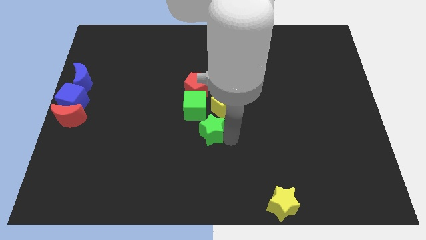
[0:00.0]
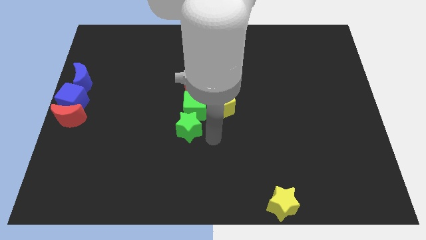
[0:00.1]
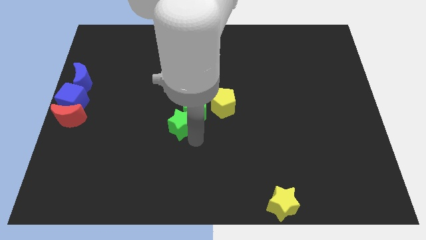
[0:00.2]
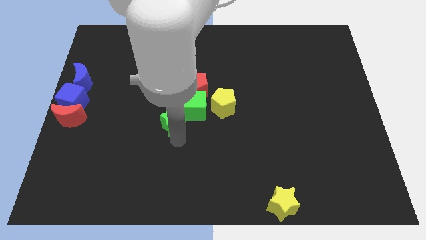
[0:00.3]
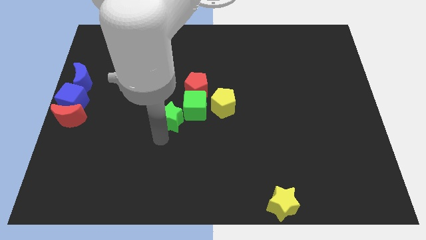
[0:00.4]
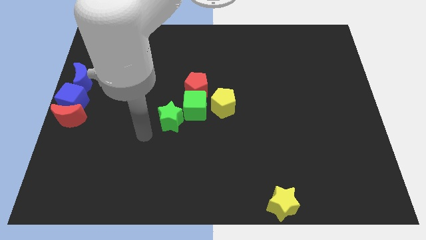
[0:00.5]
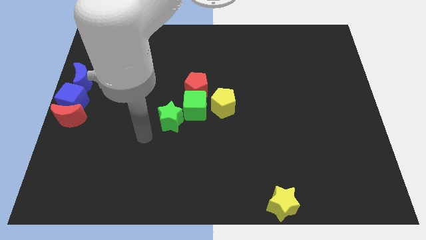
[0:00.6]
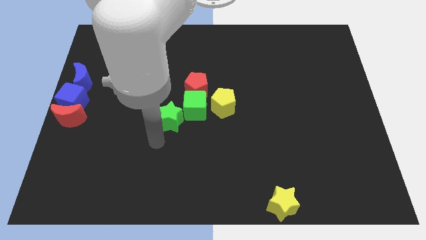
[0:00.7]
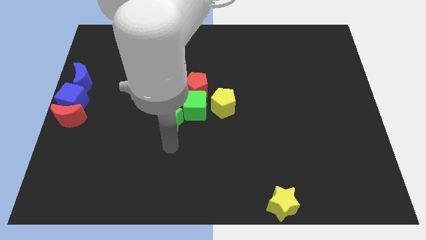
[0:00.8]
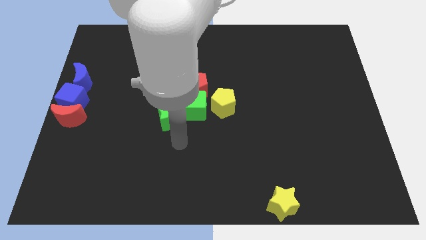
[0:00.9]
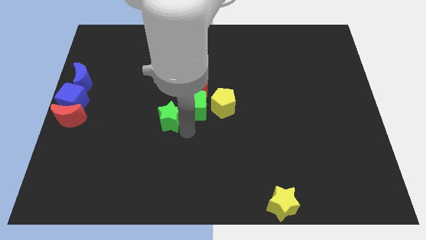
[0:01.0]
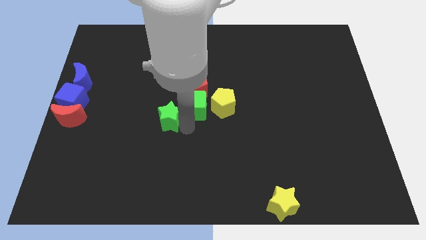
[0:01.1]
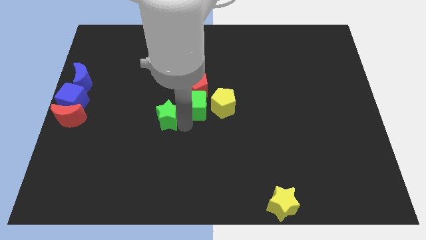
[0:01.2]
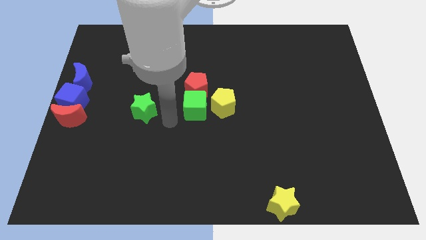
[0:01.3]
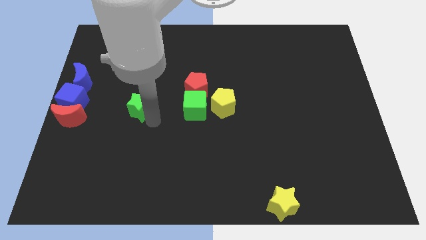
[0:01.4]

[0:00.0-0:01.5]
place the green star to the left of the green cube

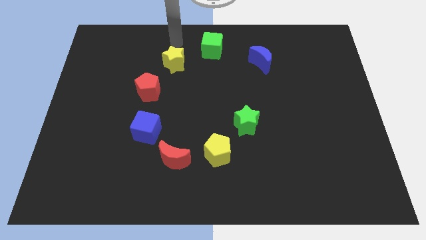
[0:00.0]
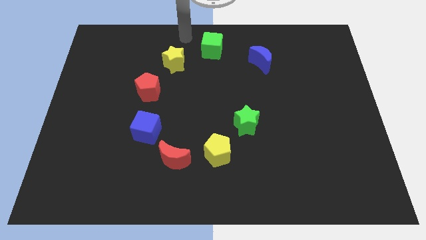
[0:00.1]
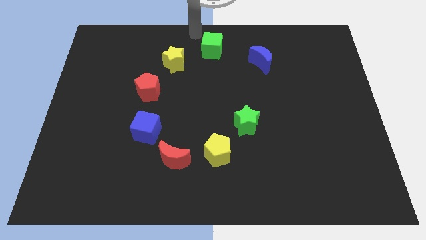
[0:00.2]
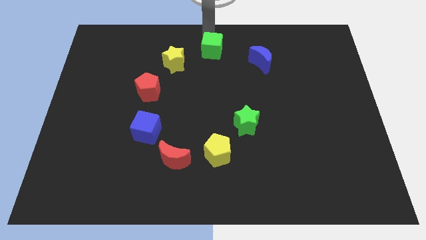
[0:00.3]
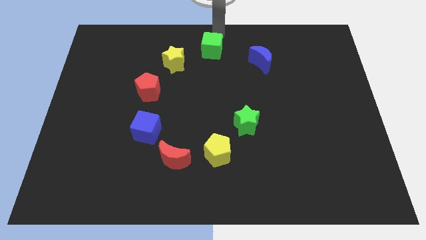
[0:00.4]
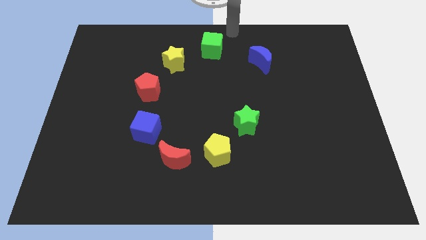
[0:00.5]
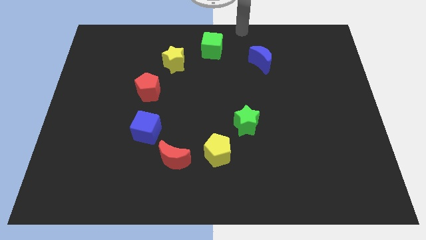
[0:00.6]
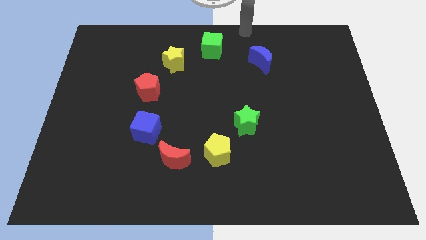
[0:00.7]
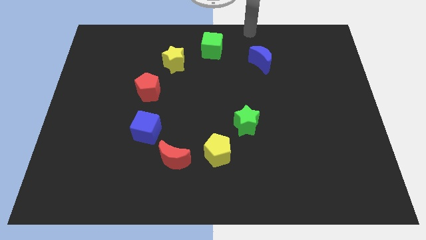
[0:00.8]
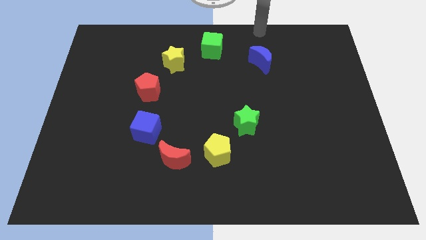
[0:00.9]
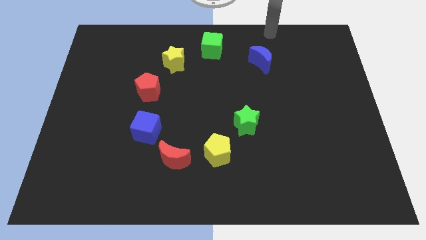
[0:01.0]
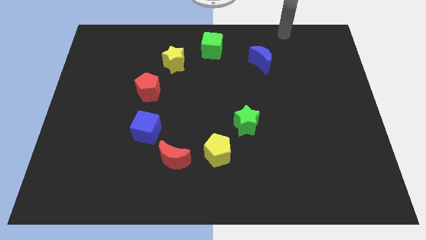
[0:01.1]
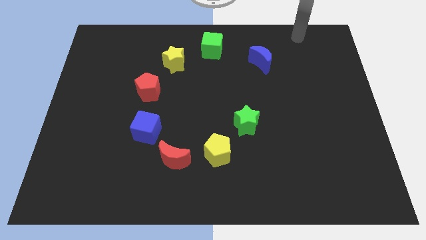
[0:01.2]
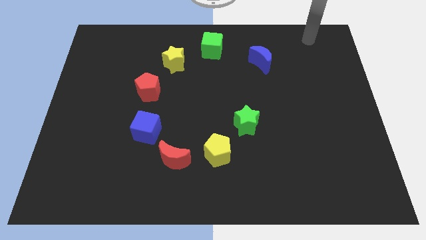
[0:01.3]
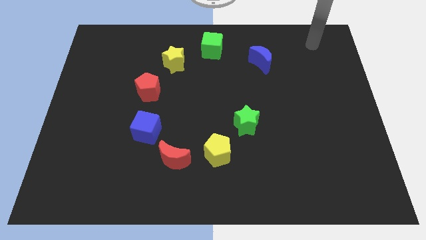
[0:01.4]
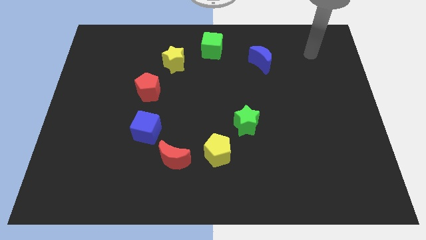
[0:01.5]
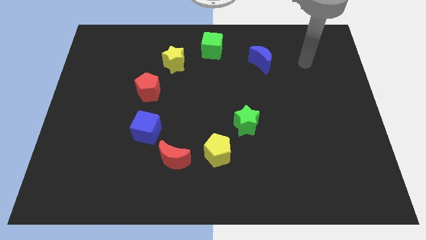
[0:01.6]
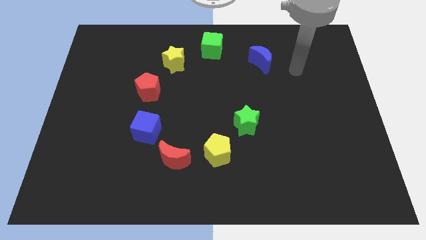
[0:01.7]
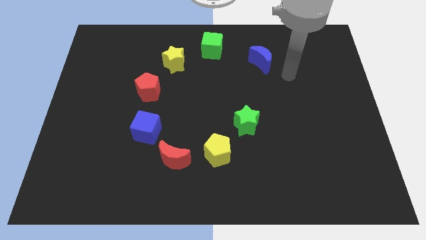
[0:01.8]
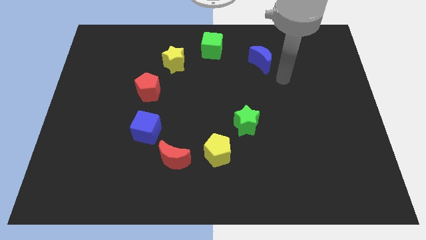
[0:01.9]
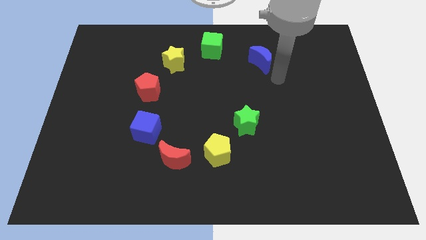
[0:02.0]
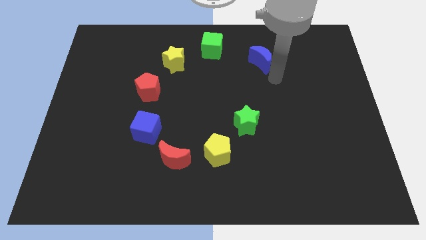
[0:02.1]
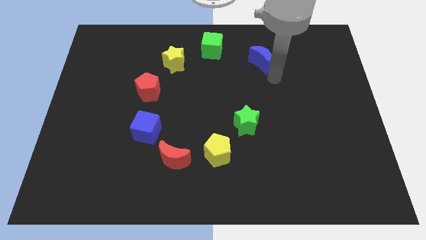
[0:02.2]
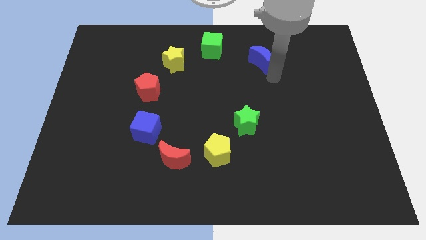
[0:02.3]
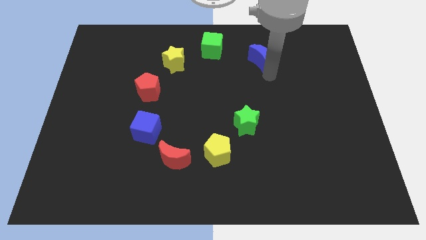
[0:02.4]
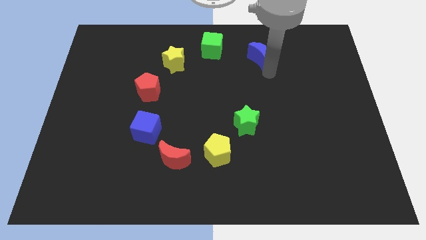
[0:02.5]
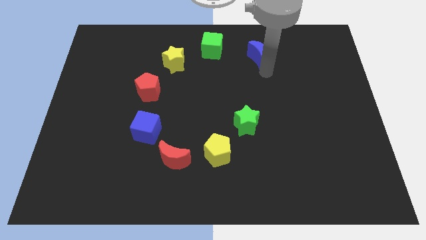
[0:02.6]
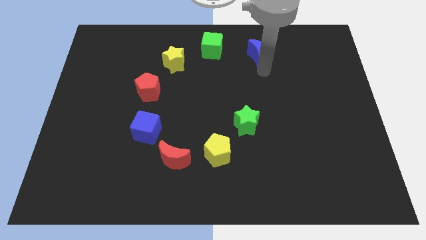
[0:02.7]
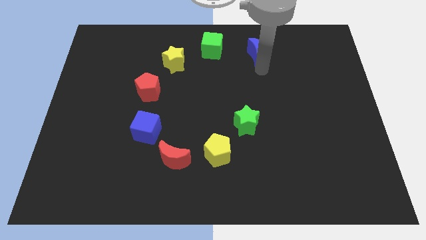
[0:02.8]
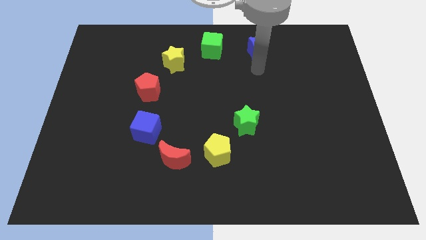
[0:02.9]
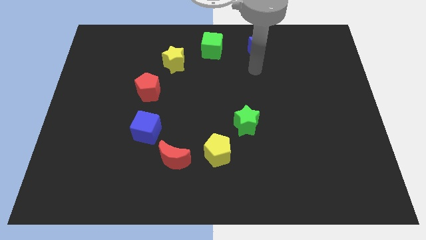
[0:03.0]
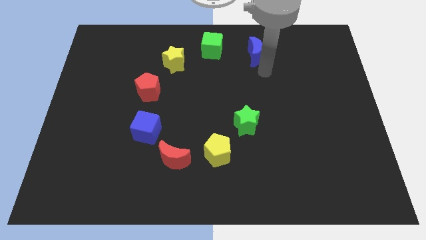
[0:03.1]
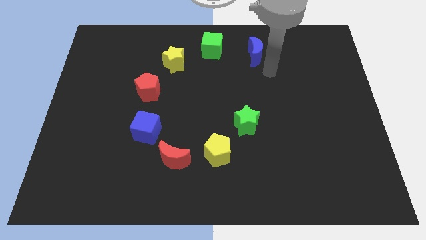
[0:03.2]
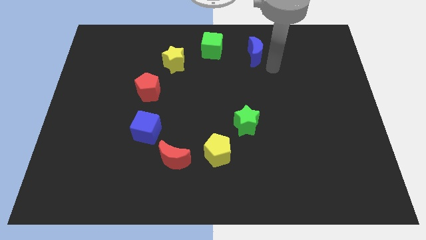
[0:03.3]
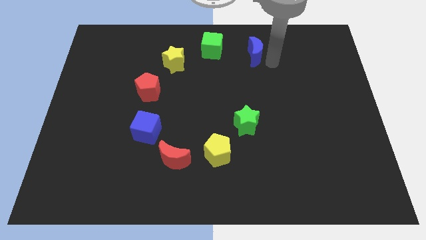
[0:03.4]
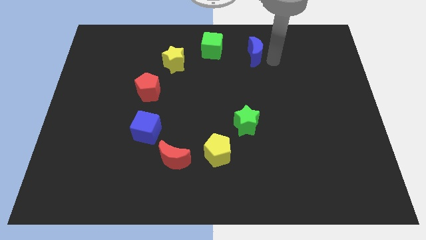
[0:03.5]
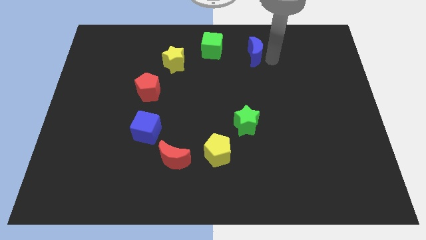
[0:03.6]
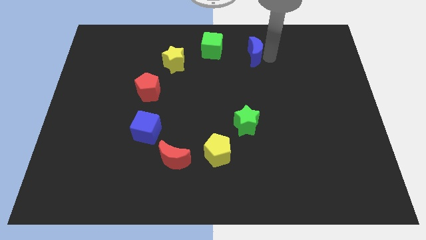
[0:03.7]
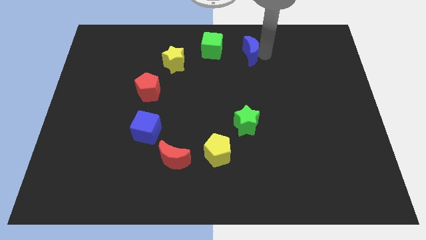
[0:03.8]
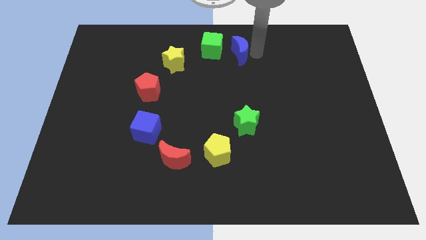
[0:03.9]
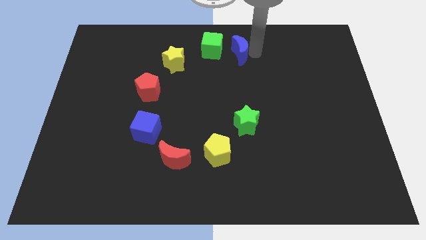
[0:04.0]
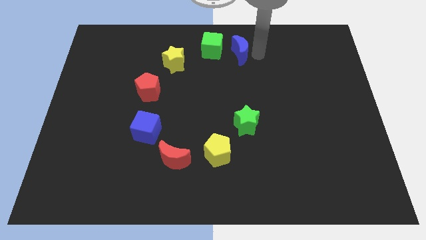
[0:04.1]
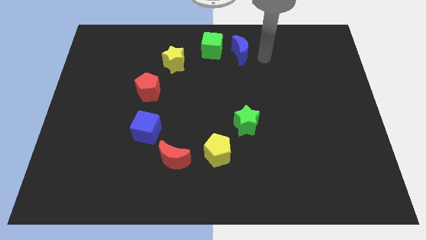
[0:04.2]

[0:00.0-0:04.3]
push the blue moon towards the green cube

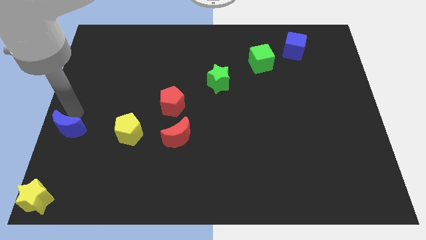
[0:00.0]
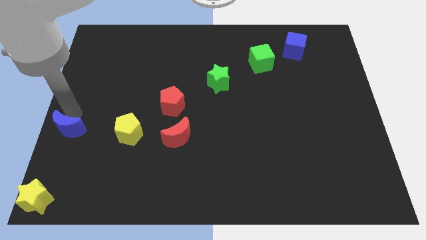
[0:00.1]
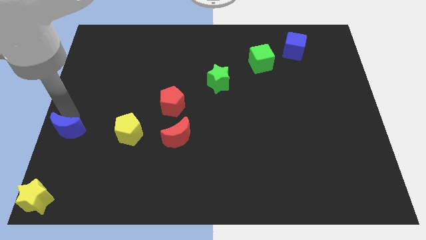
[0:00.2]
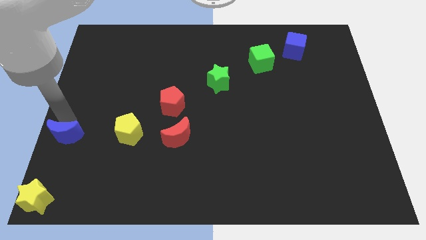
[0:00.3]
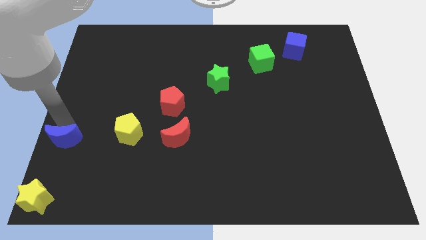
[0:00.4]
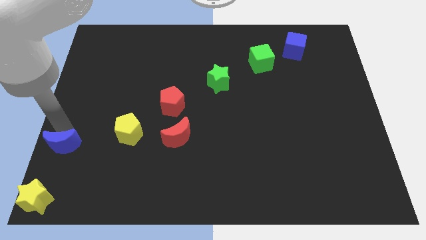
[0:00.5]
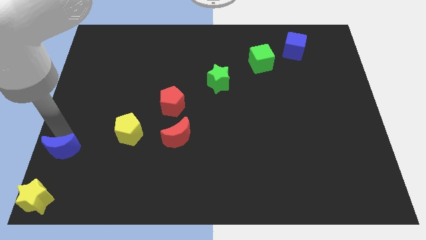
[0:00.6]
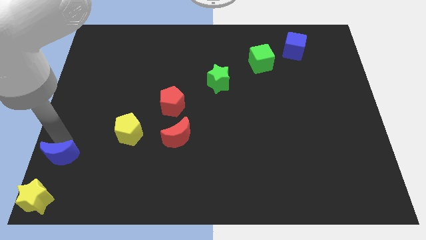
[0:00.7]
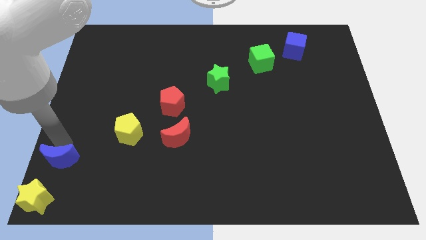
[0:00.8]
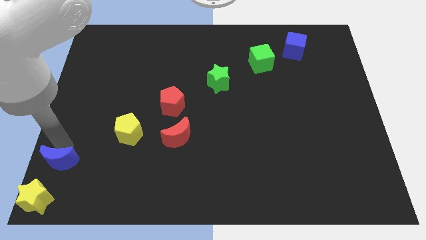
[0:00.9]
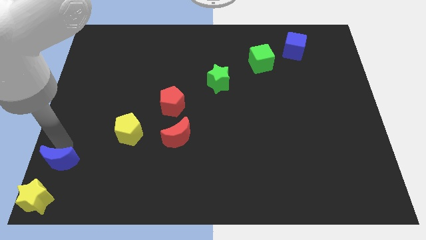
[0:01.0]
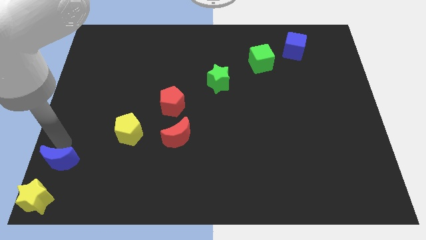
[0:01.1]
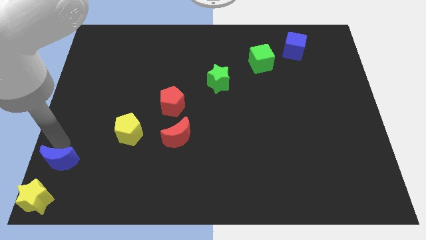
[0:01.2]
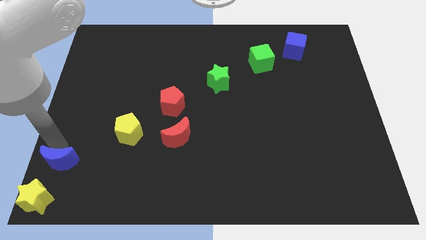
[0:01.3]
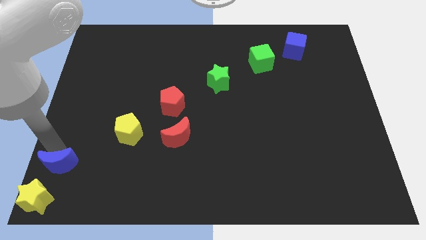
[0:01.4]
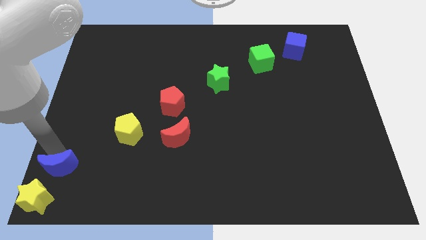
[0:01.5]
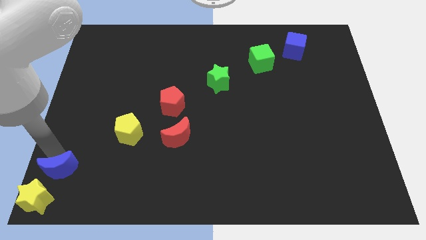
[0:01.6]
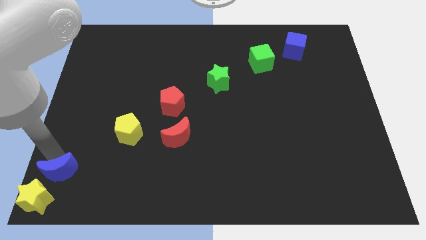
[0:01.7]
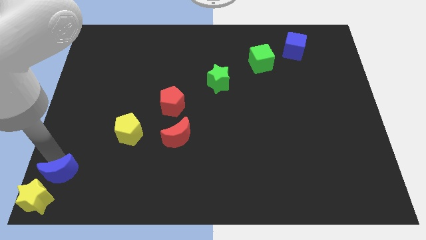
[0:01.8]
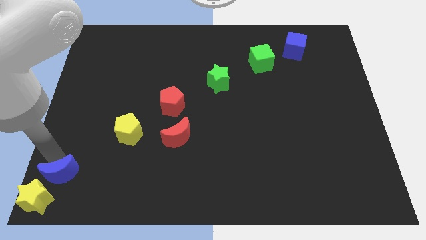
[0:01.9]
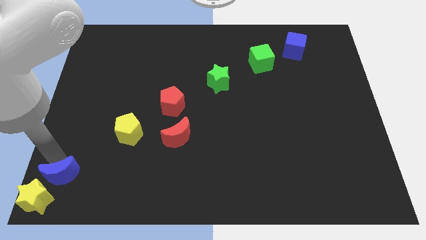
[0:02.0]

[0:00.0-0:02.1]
move blue moon towards yellow star

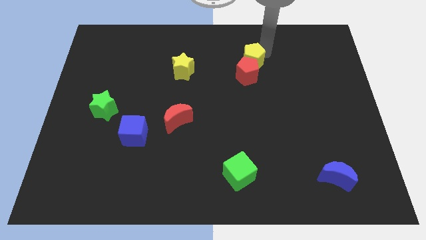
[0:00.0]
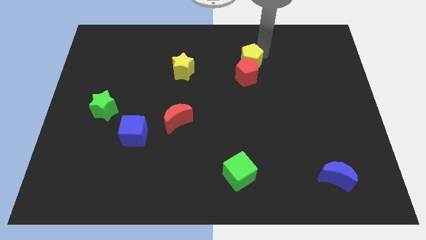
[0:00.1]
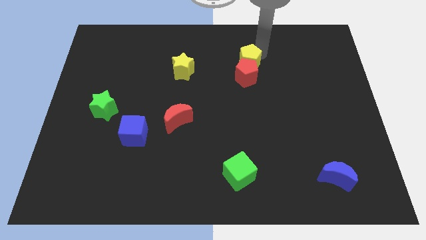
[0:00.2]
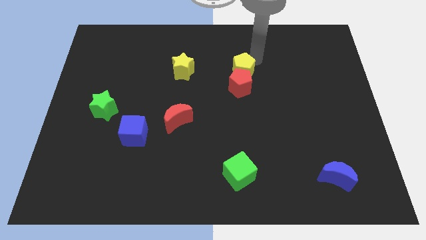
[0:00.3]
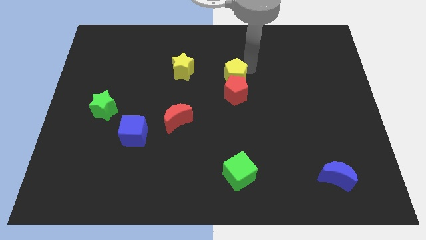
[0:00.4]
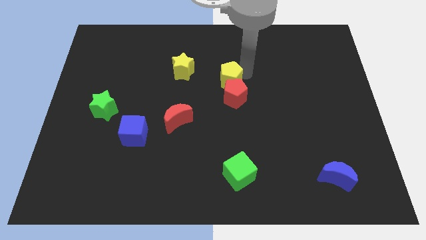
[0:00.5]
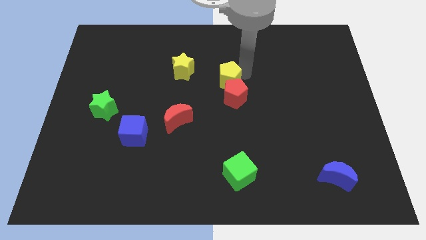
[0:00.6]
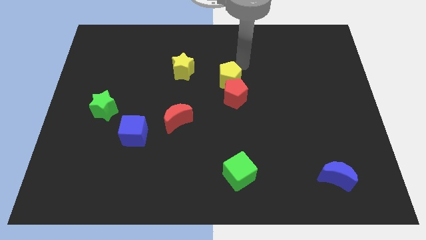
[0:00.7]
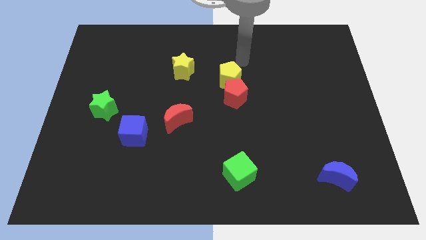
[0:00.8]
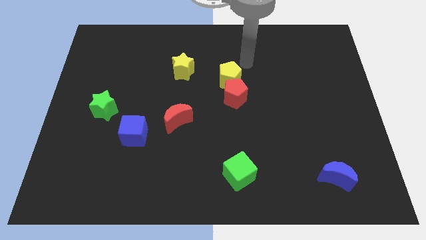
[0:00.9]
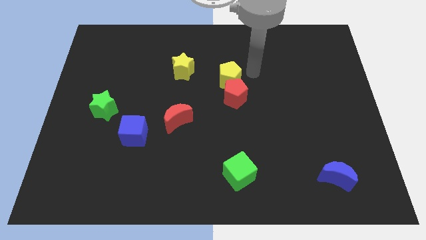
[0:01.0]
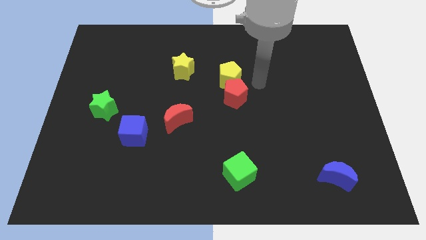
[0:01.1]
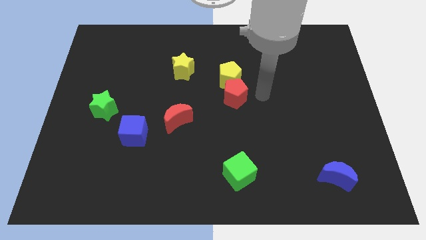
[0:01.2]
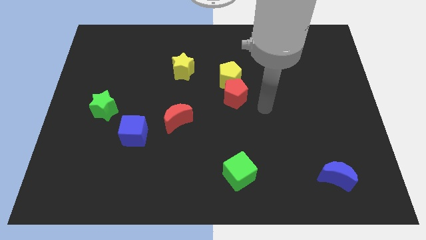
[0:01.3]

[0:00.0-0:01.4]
move the red pentagon with the yellow pentagon
